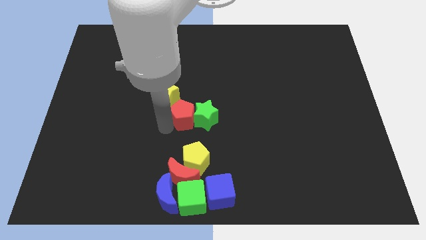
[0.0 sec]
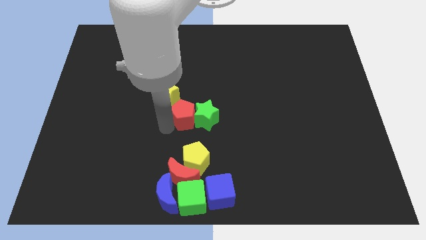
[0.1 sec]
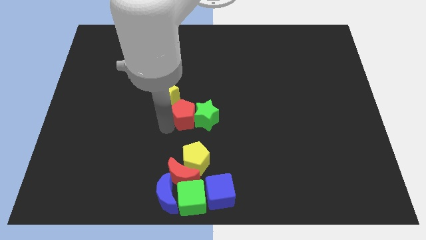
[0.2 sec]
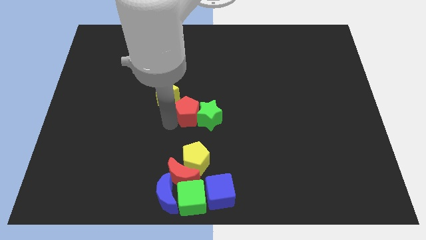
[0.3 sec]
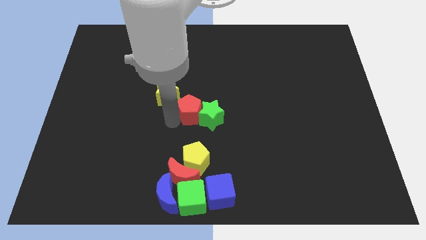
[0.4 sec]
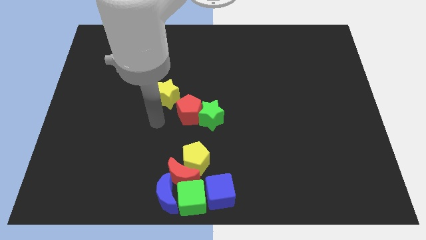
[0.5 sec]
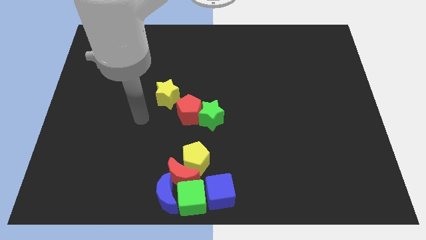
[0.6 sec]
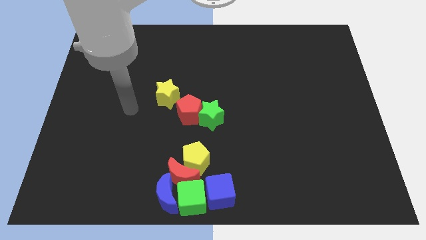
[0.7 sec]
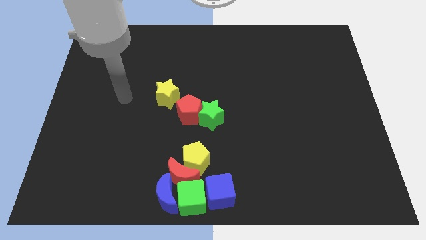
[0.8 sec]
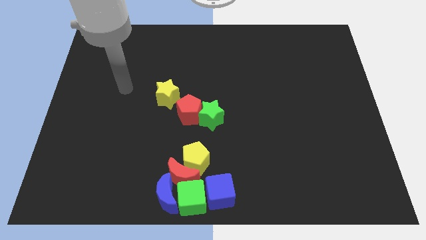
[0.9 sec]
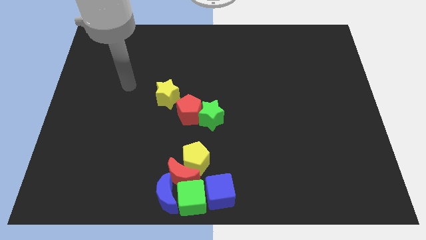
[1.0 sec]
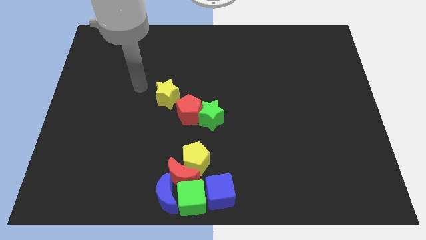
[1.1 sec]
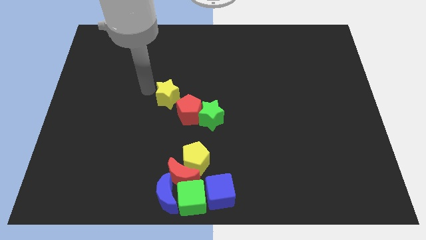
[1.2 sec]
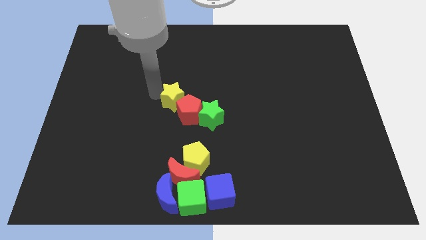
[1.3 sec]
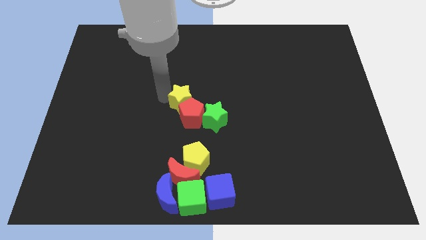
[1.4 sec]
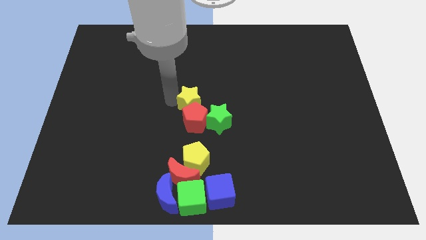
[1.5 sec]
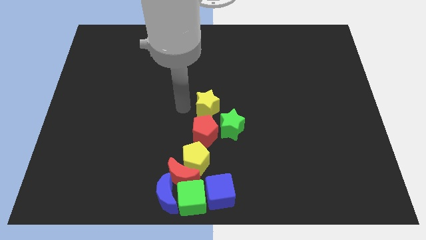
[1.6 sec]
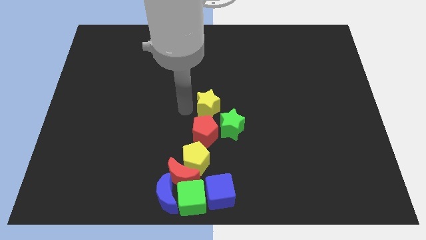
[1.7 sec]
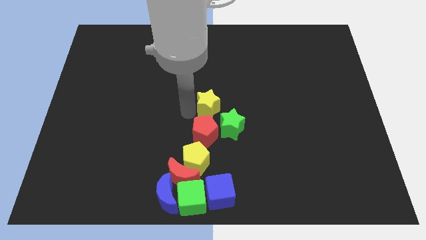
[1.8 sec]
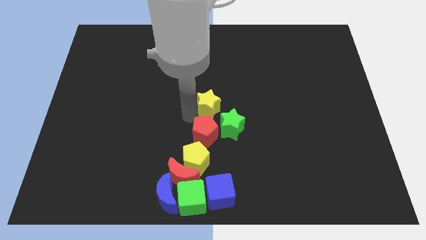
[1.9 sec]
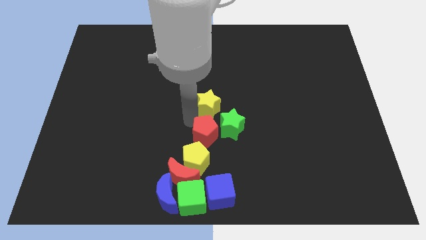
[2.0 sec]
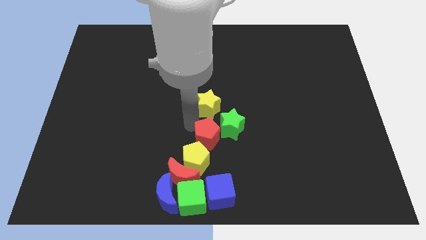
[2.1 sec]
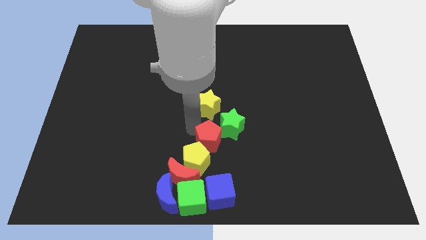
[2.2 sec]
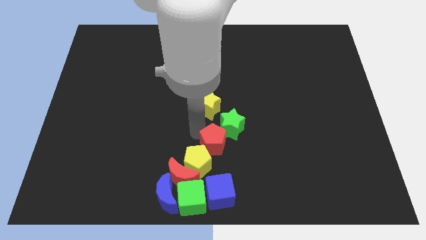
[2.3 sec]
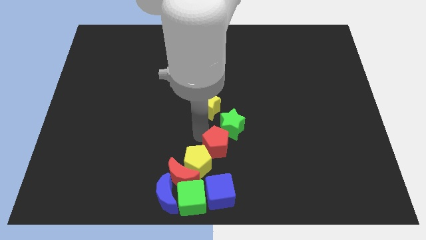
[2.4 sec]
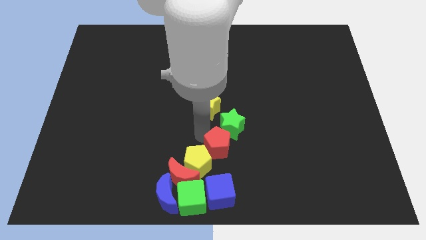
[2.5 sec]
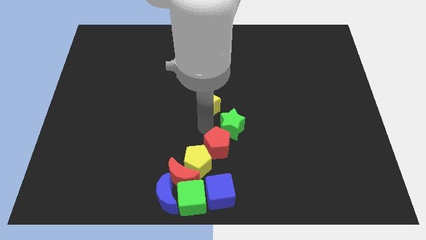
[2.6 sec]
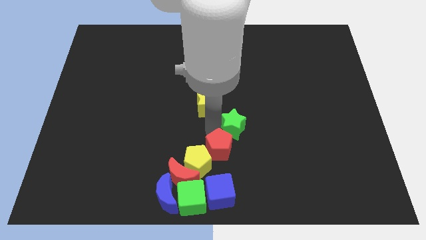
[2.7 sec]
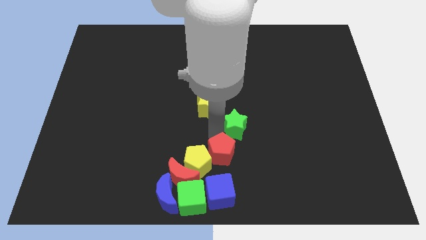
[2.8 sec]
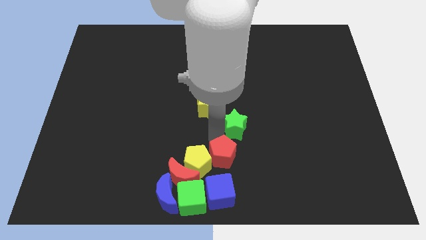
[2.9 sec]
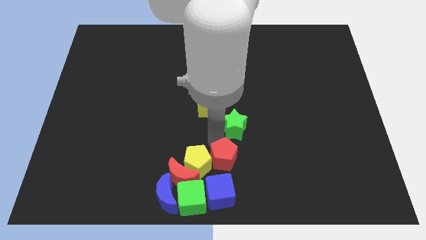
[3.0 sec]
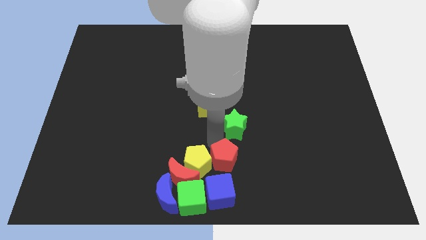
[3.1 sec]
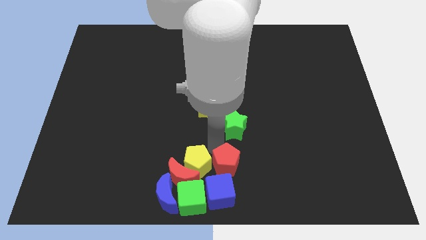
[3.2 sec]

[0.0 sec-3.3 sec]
move the red pentagon to the right side of the yellow pentagon

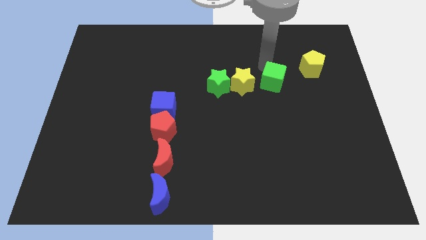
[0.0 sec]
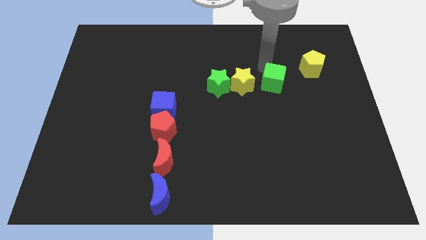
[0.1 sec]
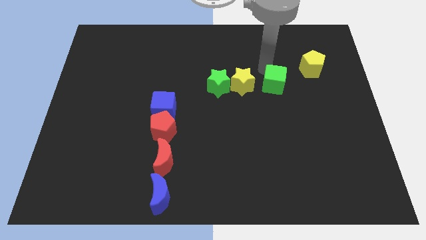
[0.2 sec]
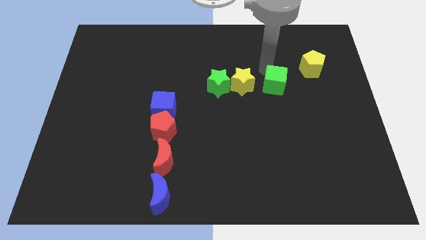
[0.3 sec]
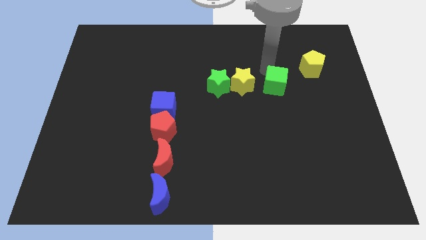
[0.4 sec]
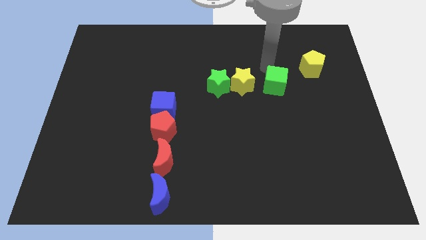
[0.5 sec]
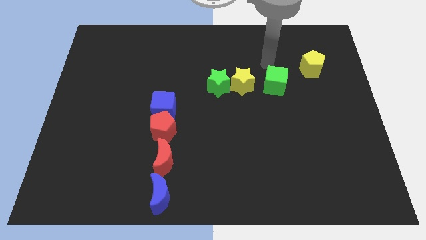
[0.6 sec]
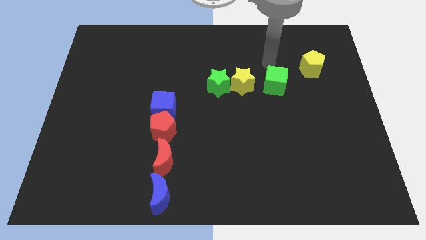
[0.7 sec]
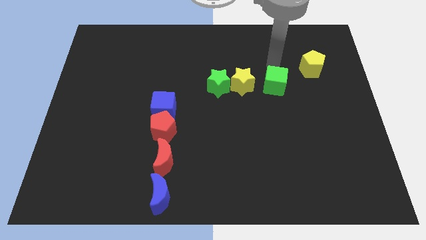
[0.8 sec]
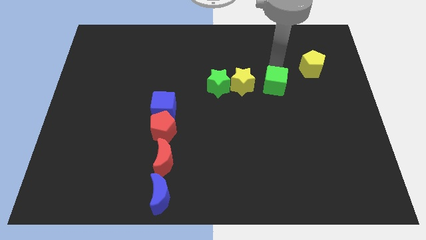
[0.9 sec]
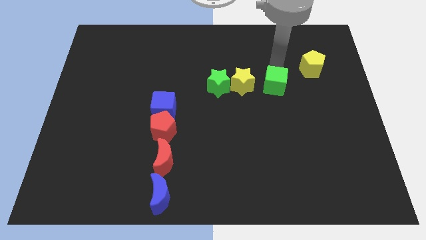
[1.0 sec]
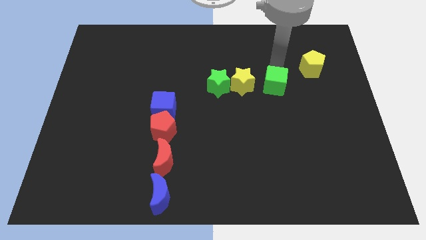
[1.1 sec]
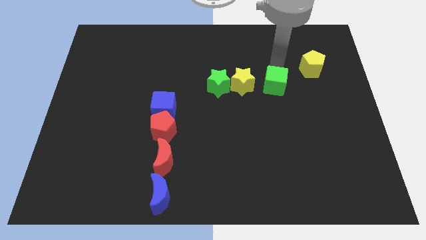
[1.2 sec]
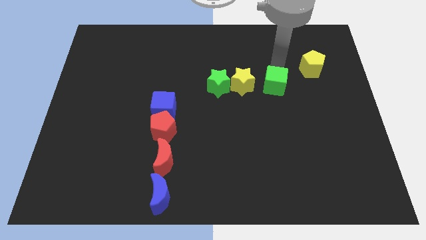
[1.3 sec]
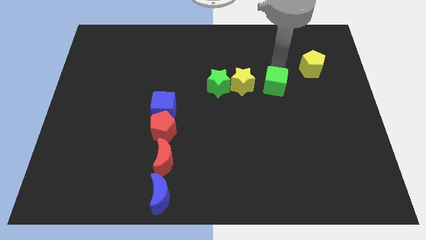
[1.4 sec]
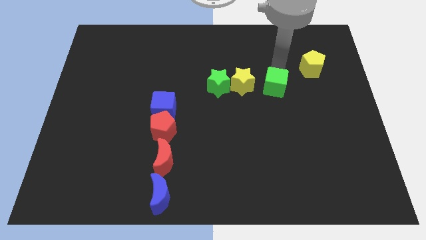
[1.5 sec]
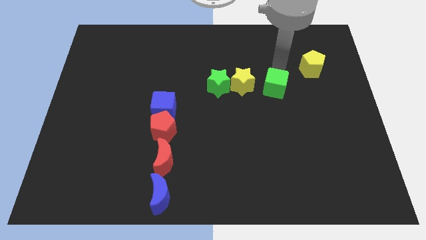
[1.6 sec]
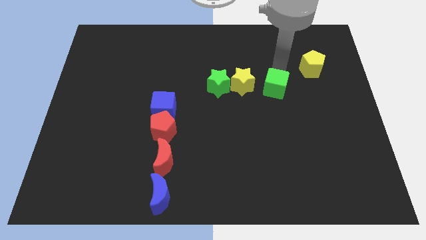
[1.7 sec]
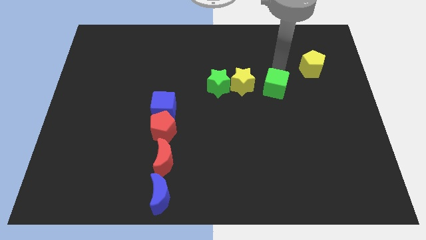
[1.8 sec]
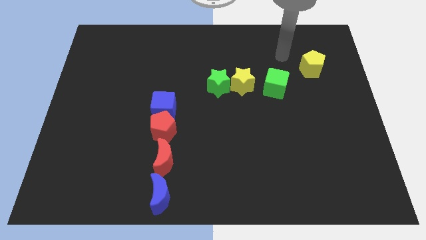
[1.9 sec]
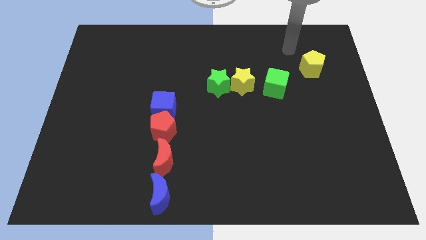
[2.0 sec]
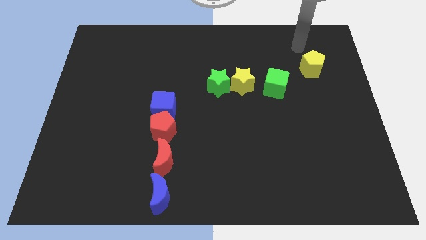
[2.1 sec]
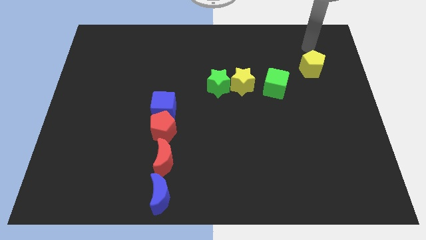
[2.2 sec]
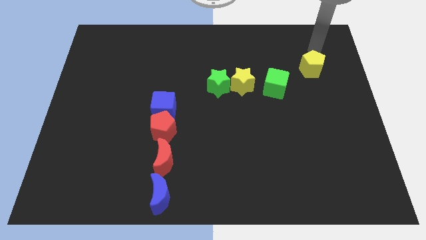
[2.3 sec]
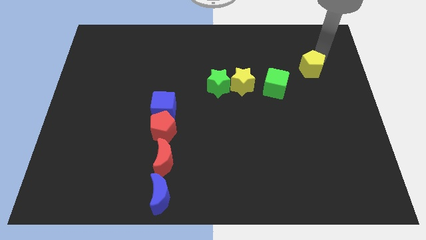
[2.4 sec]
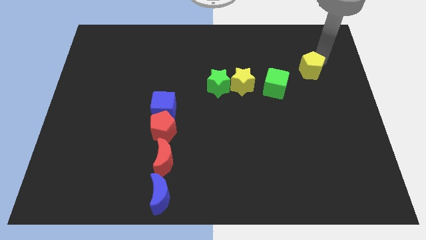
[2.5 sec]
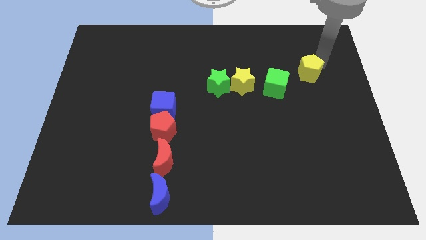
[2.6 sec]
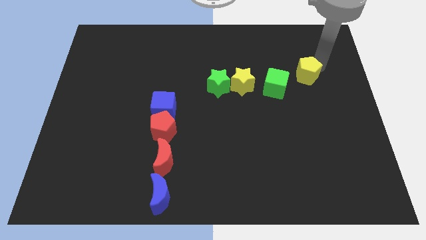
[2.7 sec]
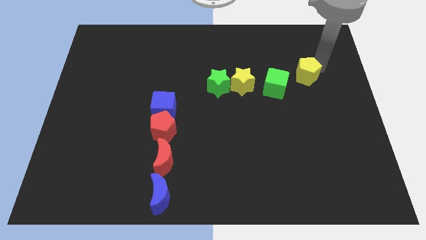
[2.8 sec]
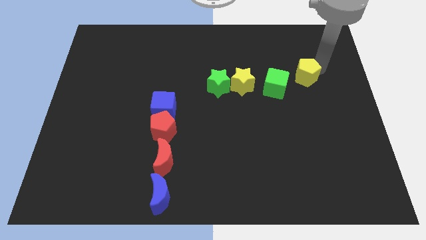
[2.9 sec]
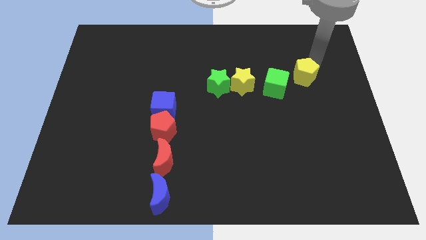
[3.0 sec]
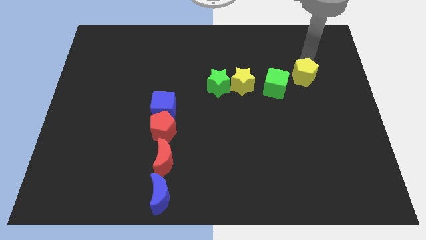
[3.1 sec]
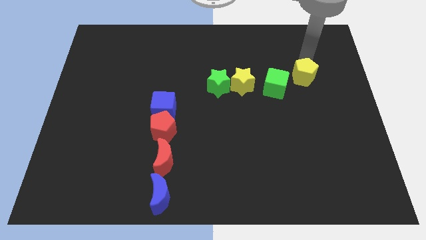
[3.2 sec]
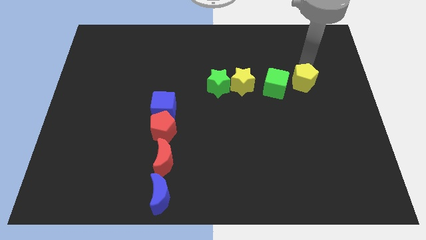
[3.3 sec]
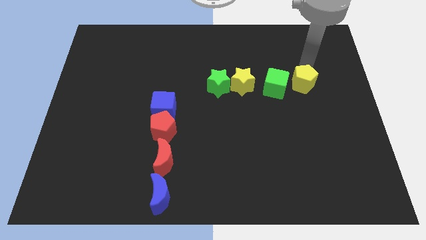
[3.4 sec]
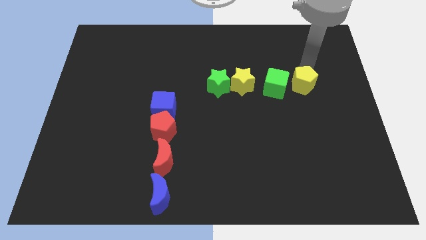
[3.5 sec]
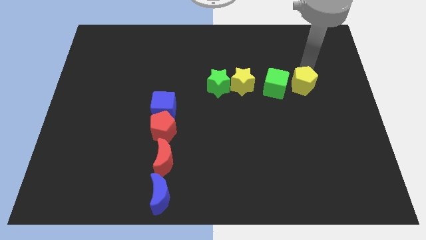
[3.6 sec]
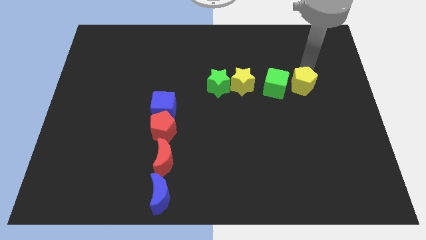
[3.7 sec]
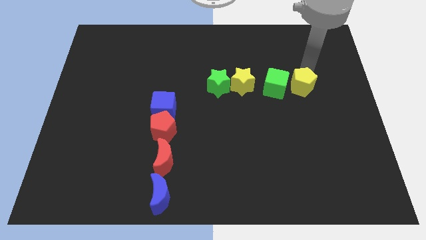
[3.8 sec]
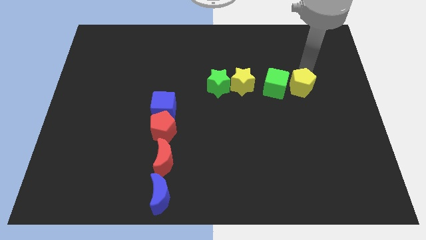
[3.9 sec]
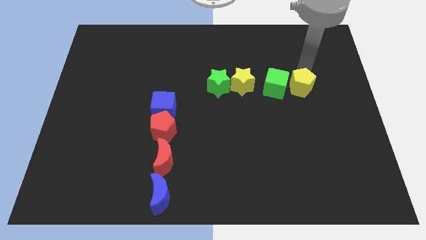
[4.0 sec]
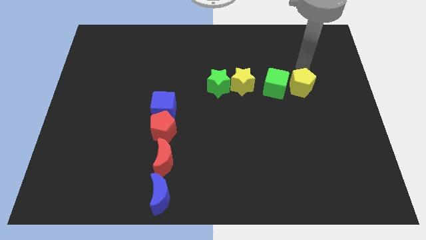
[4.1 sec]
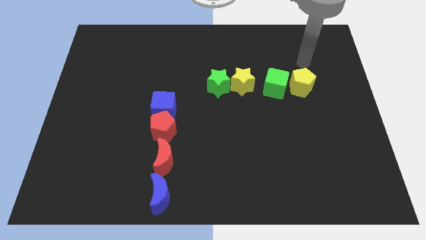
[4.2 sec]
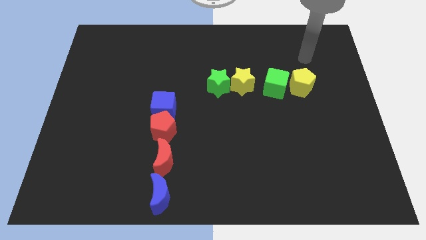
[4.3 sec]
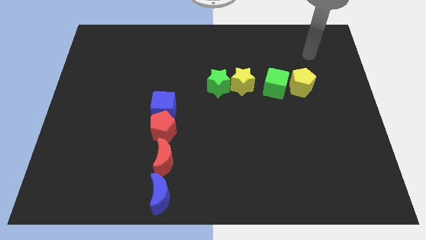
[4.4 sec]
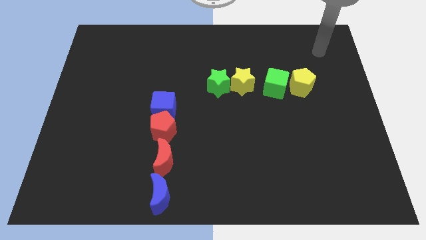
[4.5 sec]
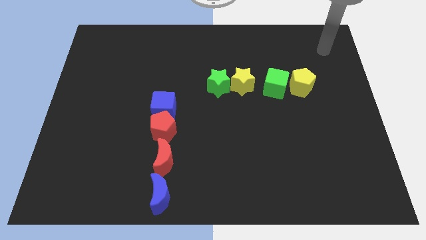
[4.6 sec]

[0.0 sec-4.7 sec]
move the yellow pentagon close to the right of the green cube

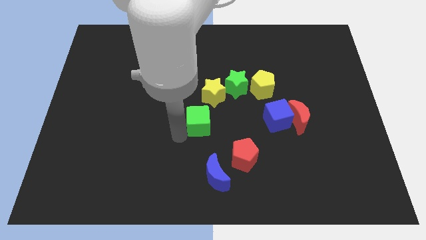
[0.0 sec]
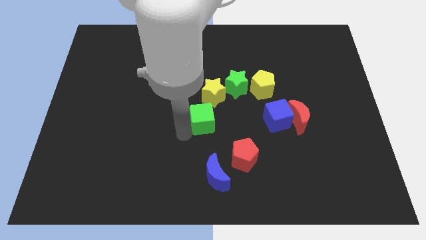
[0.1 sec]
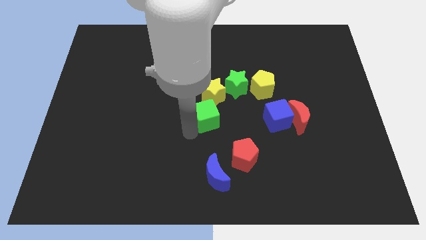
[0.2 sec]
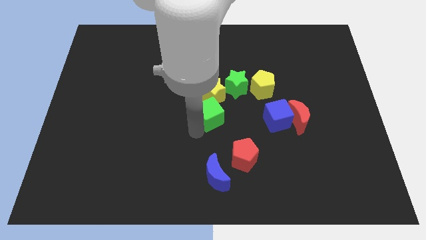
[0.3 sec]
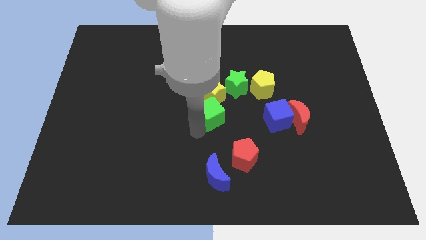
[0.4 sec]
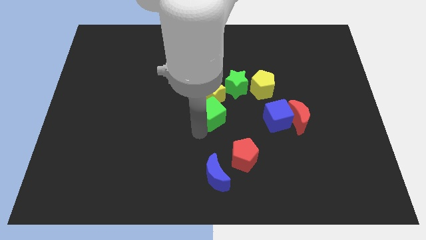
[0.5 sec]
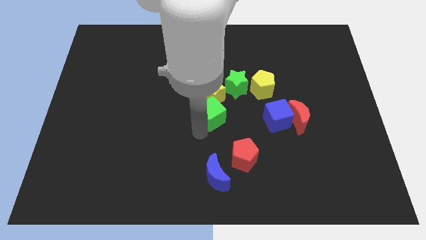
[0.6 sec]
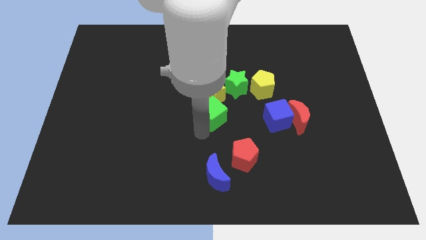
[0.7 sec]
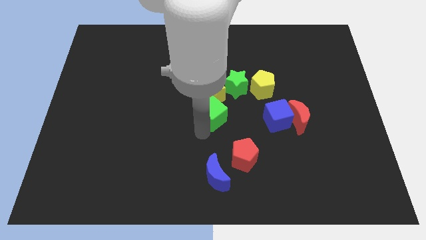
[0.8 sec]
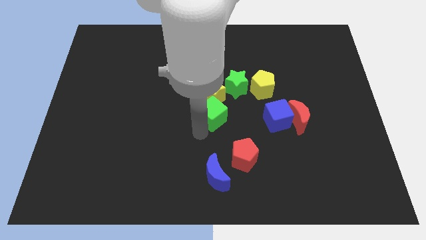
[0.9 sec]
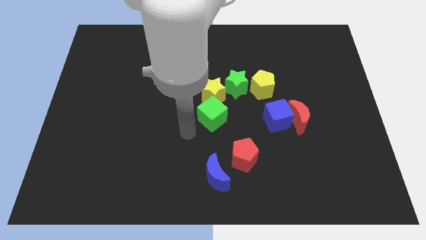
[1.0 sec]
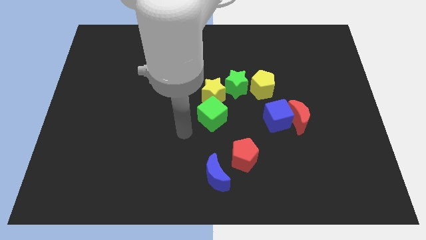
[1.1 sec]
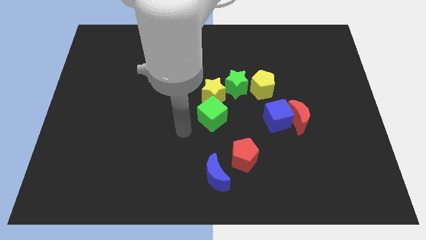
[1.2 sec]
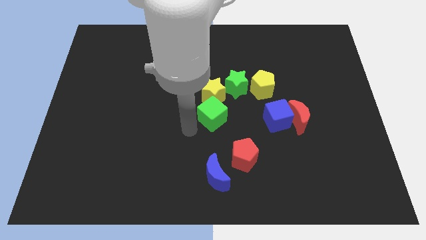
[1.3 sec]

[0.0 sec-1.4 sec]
place the green cube below the yellow star
